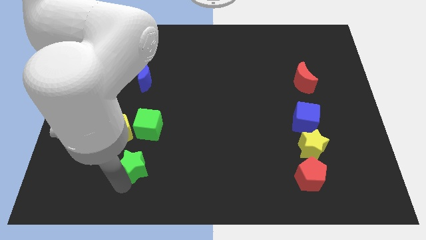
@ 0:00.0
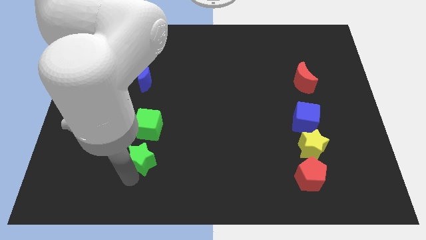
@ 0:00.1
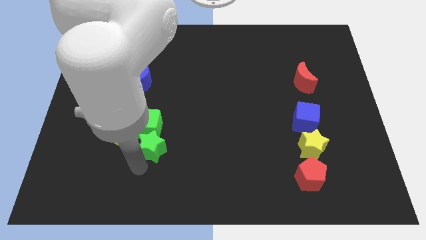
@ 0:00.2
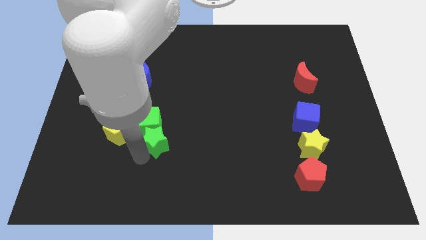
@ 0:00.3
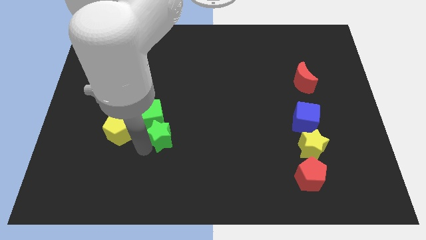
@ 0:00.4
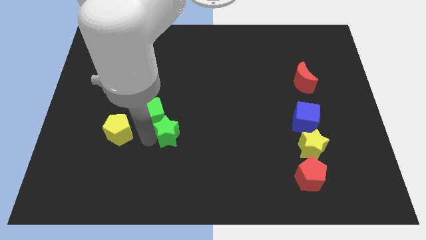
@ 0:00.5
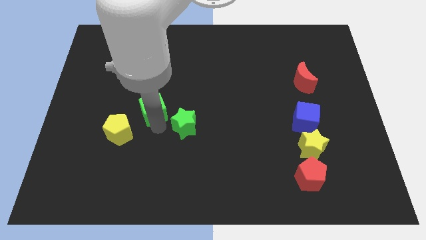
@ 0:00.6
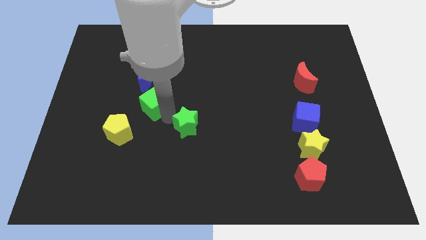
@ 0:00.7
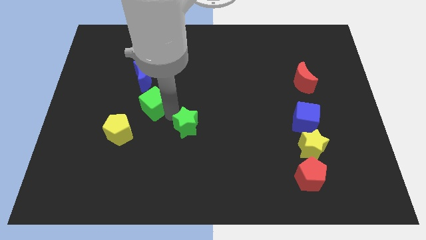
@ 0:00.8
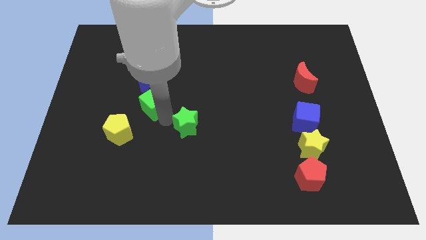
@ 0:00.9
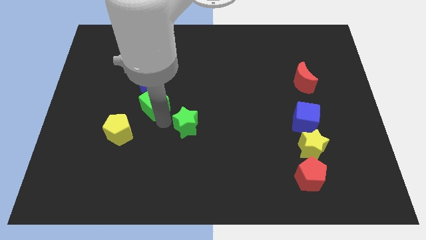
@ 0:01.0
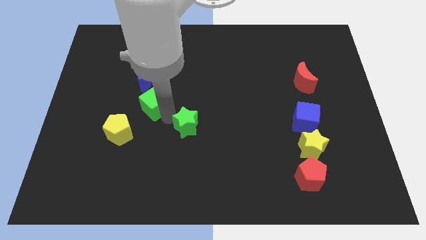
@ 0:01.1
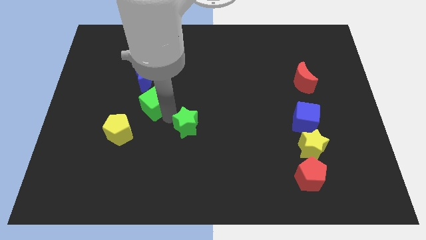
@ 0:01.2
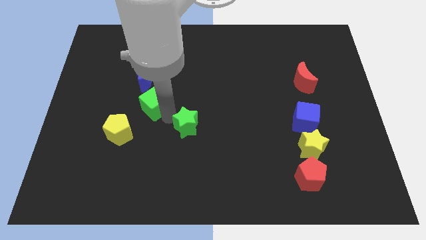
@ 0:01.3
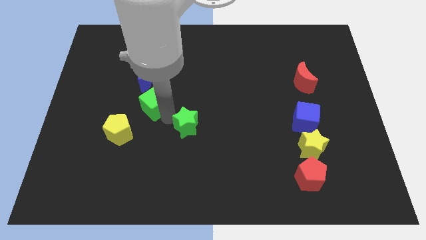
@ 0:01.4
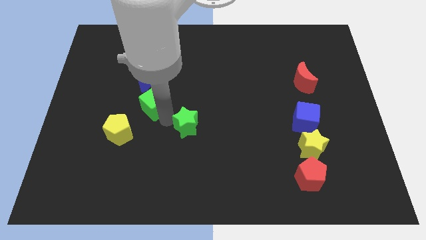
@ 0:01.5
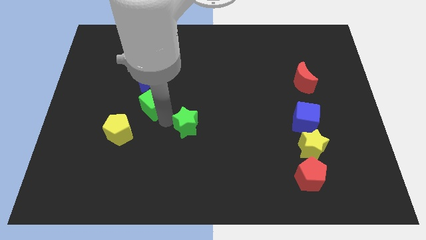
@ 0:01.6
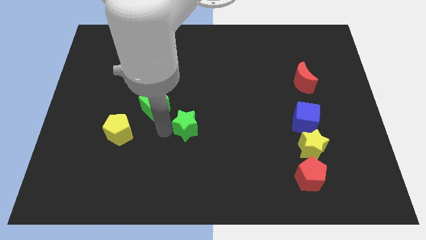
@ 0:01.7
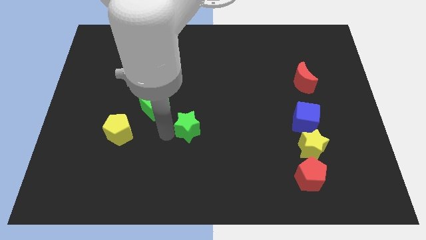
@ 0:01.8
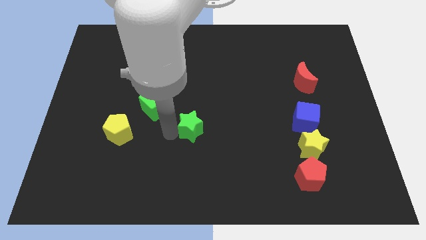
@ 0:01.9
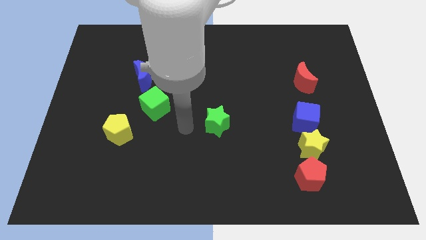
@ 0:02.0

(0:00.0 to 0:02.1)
push the green star towards the center of the board

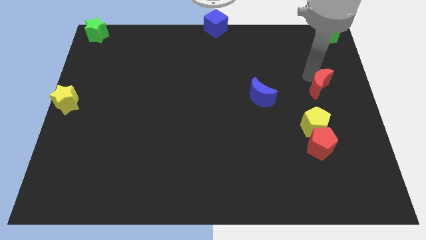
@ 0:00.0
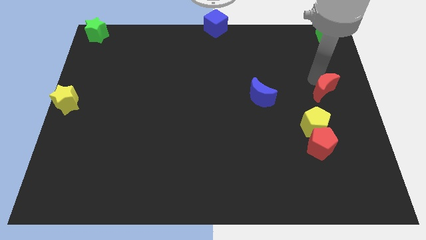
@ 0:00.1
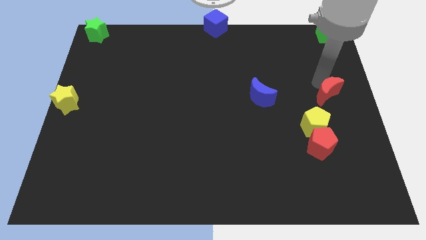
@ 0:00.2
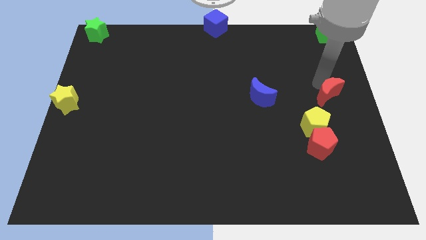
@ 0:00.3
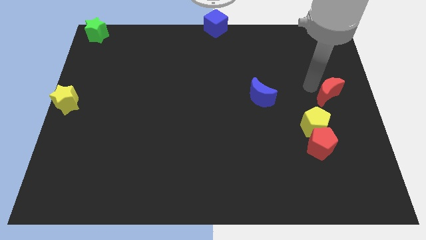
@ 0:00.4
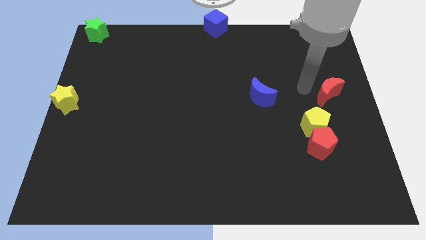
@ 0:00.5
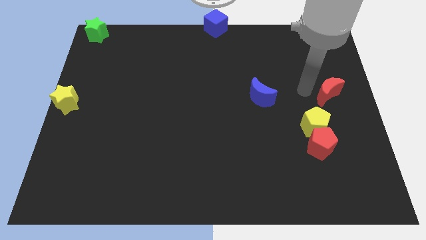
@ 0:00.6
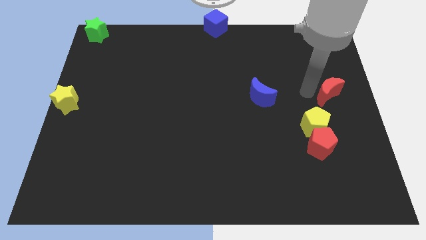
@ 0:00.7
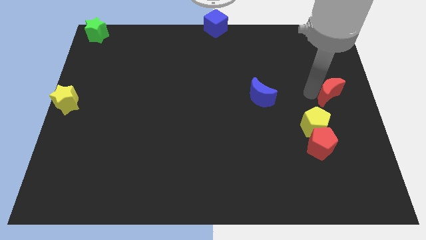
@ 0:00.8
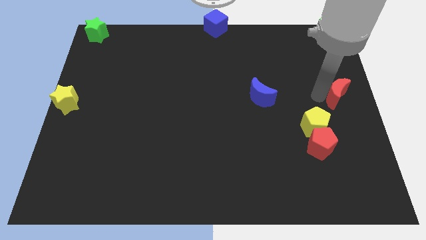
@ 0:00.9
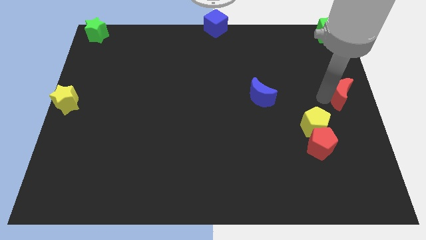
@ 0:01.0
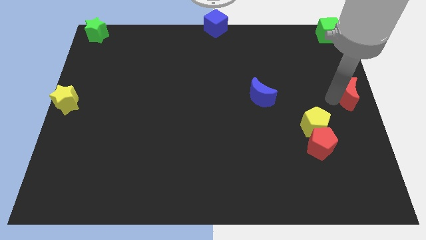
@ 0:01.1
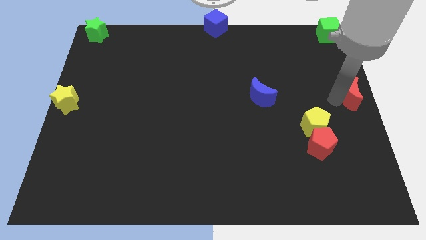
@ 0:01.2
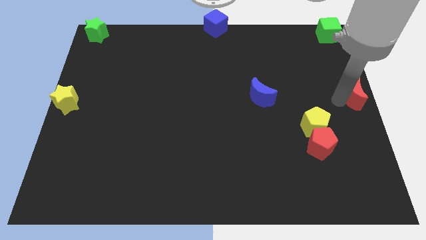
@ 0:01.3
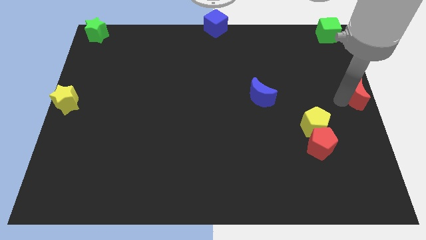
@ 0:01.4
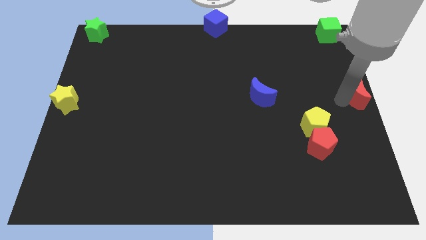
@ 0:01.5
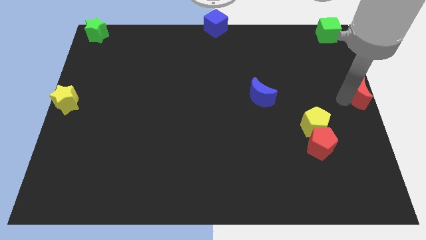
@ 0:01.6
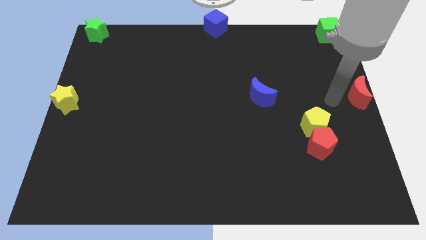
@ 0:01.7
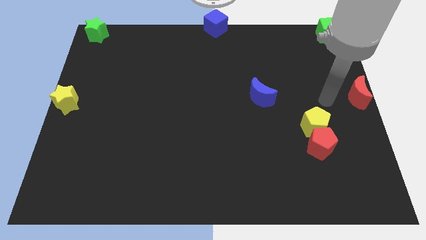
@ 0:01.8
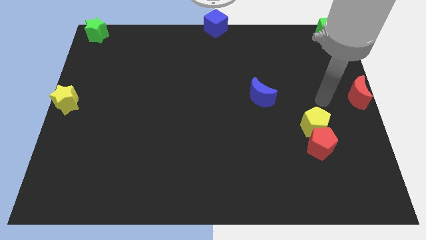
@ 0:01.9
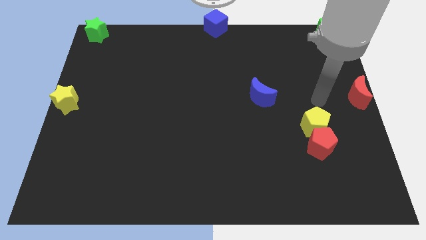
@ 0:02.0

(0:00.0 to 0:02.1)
move the red moon to the center right

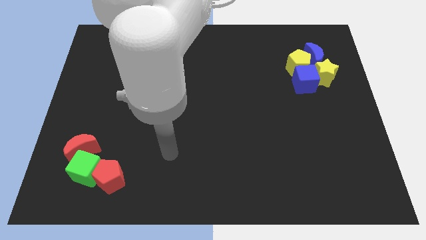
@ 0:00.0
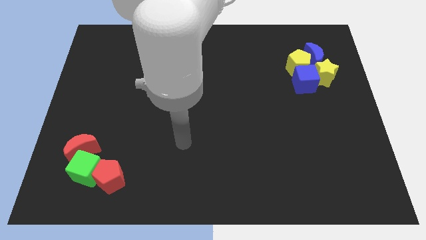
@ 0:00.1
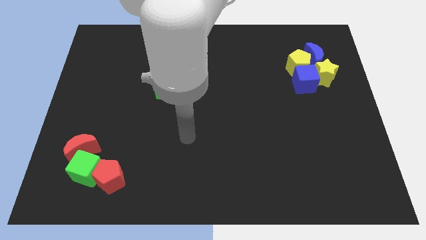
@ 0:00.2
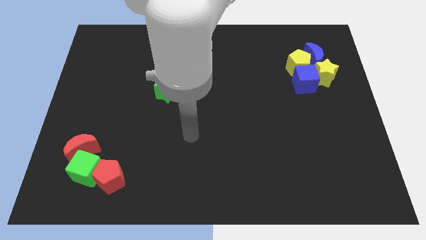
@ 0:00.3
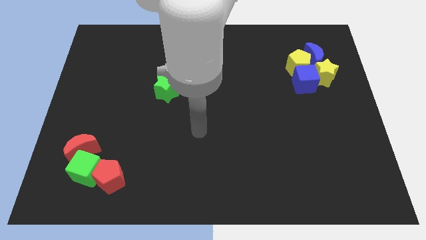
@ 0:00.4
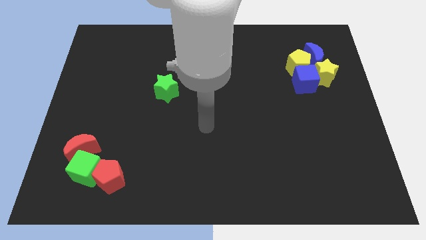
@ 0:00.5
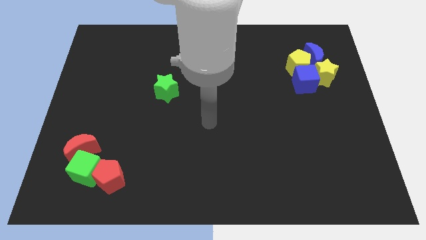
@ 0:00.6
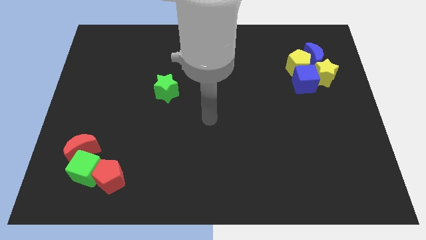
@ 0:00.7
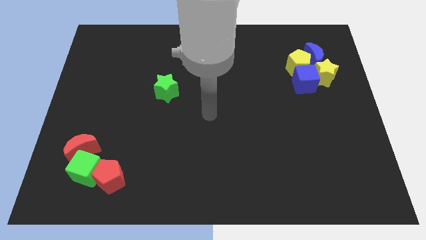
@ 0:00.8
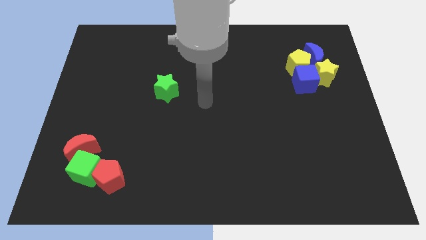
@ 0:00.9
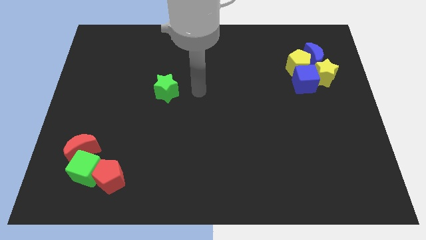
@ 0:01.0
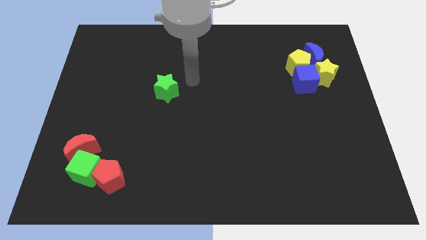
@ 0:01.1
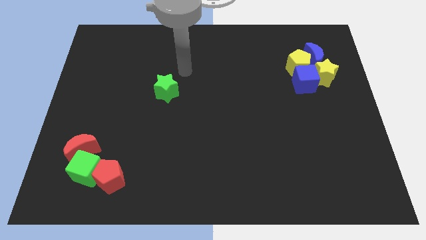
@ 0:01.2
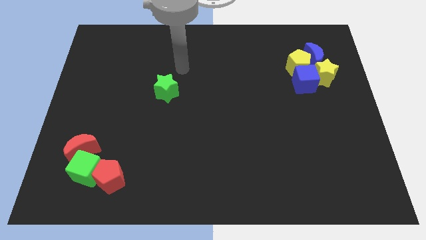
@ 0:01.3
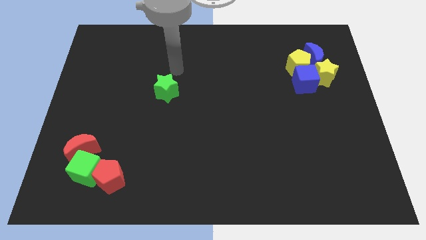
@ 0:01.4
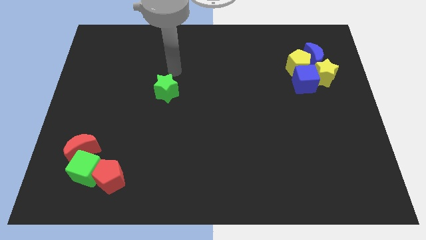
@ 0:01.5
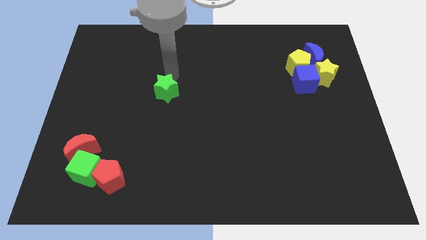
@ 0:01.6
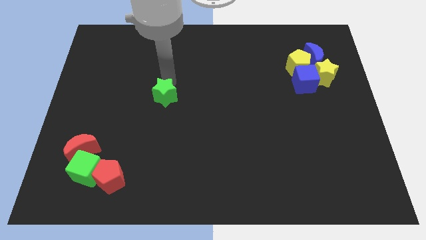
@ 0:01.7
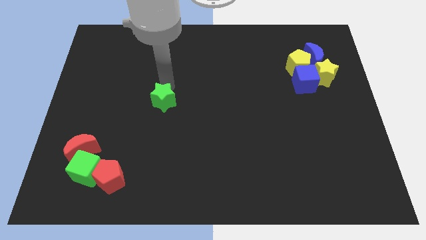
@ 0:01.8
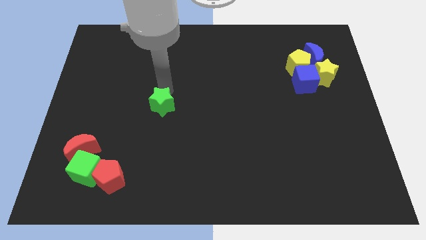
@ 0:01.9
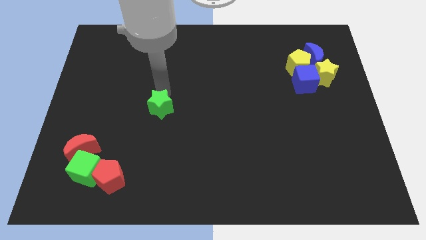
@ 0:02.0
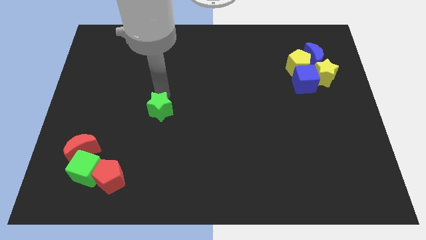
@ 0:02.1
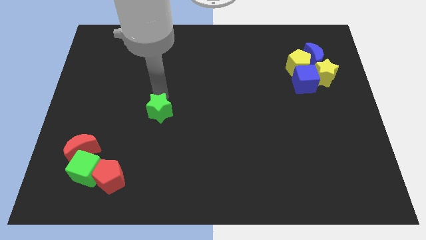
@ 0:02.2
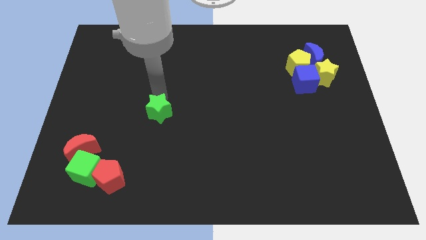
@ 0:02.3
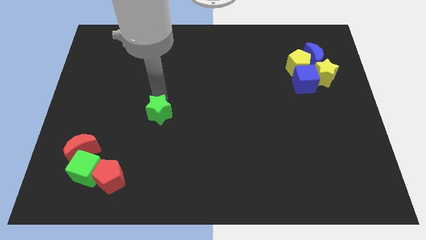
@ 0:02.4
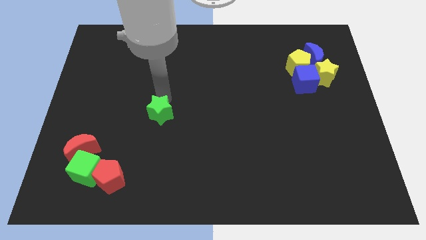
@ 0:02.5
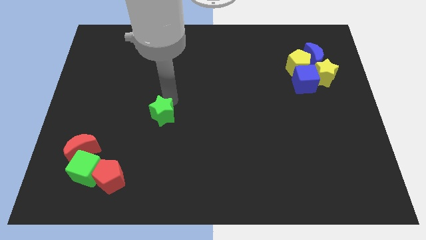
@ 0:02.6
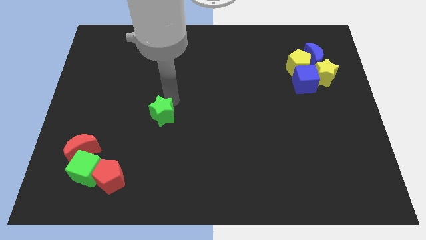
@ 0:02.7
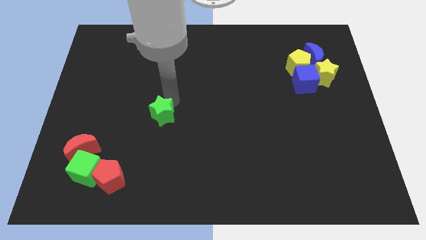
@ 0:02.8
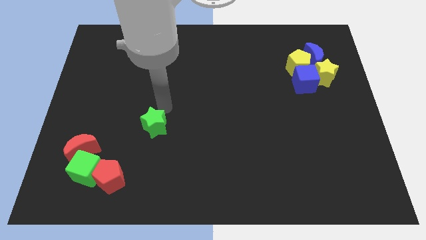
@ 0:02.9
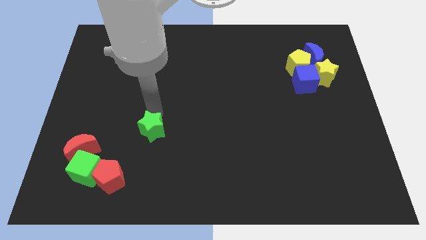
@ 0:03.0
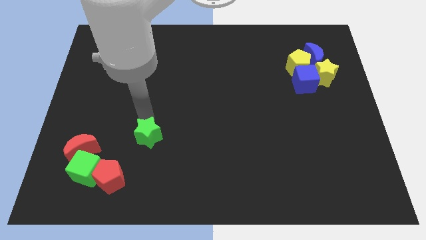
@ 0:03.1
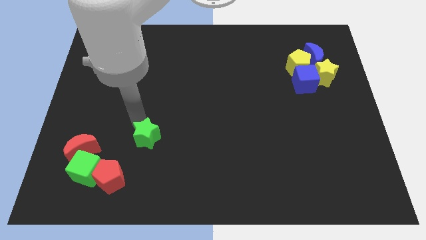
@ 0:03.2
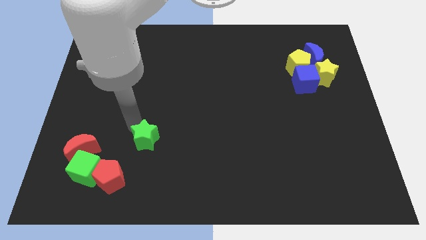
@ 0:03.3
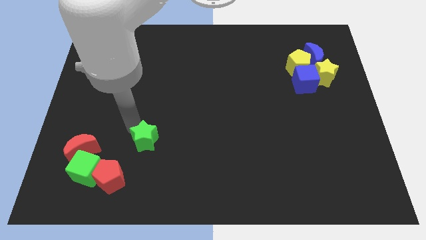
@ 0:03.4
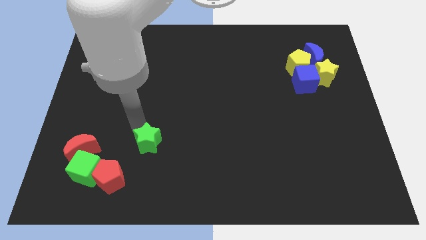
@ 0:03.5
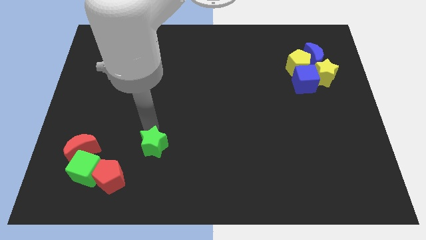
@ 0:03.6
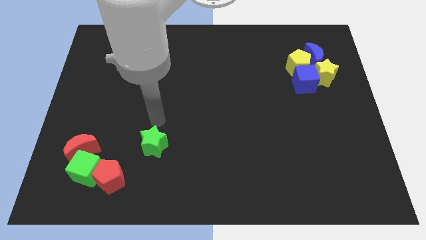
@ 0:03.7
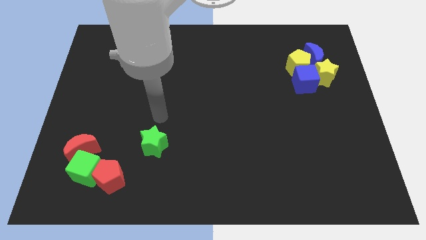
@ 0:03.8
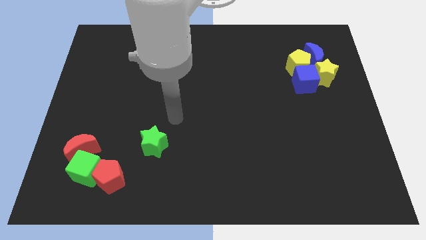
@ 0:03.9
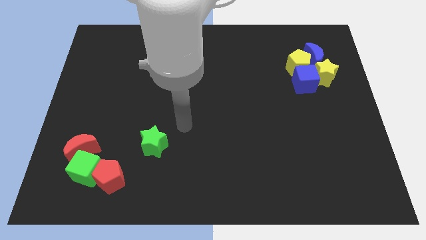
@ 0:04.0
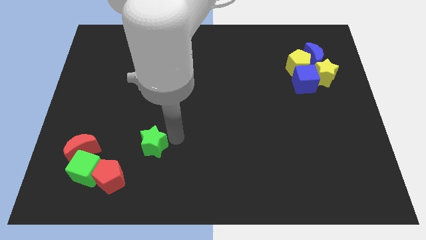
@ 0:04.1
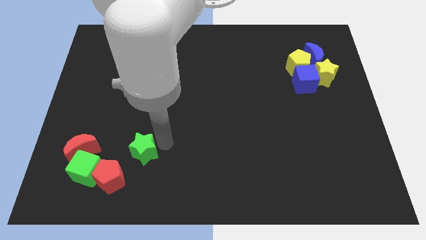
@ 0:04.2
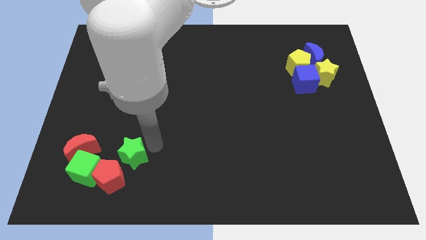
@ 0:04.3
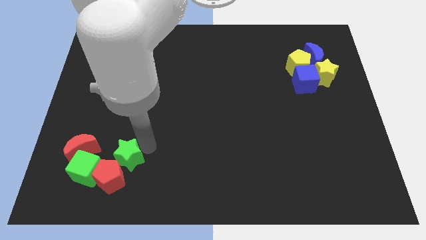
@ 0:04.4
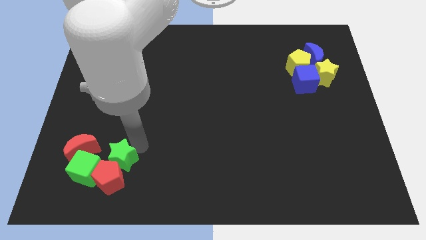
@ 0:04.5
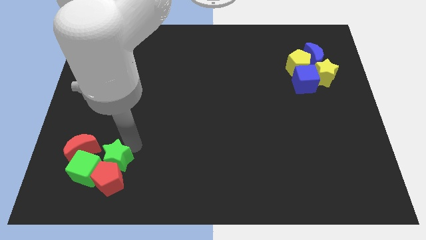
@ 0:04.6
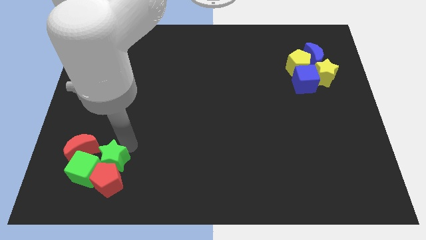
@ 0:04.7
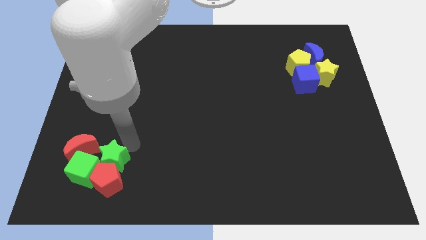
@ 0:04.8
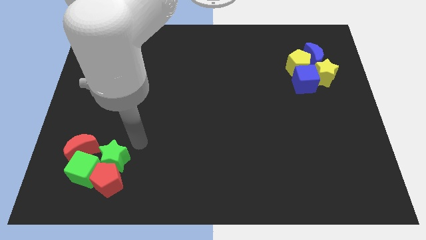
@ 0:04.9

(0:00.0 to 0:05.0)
push the green star into the red pentagon
